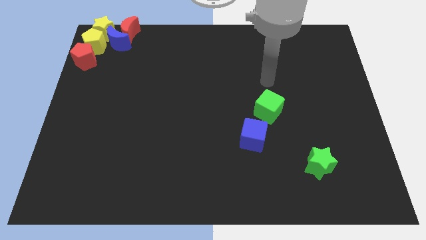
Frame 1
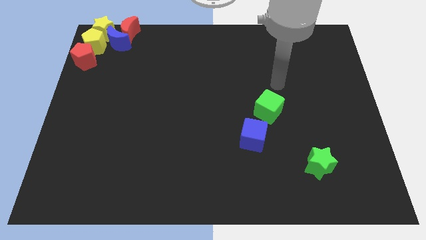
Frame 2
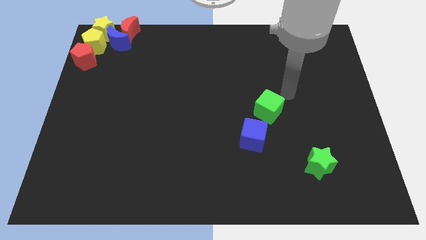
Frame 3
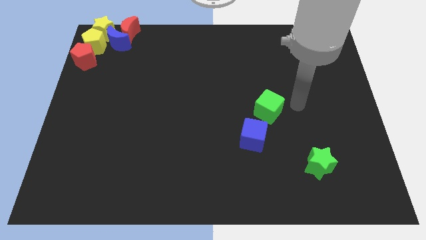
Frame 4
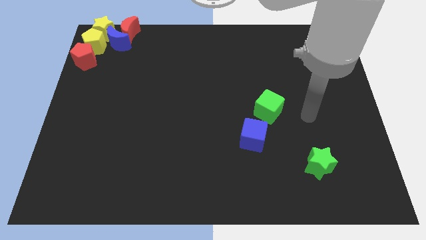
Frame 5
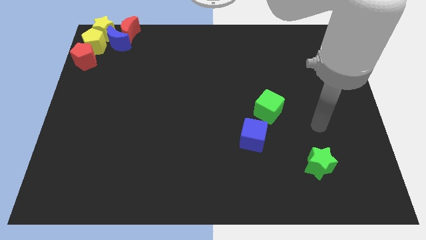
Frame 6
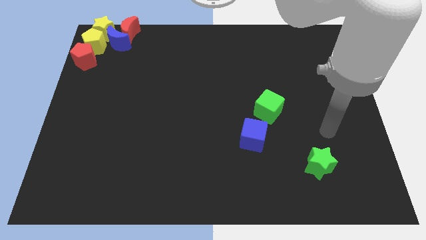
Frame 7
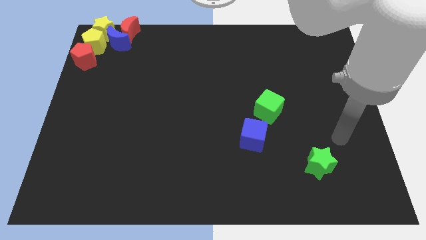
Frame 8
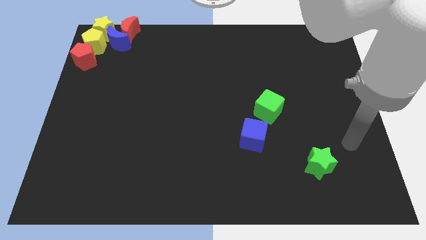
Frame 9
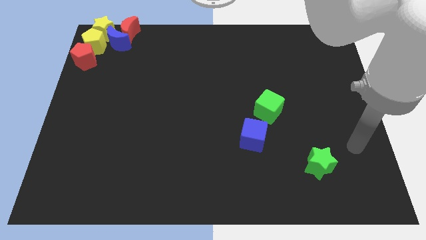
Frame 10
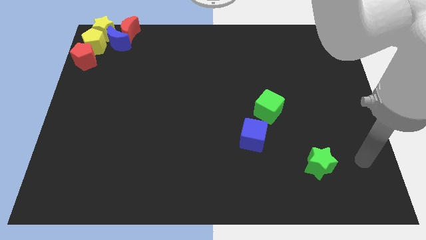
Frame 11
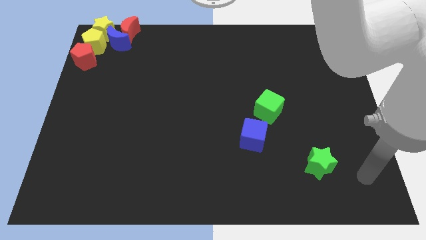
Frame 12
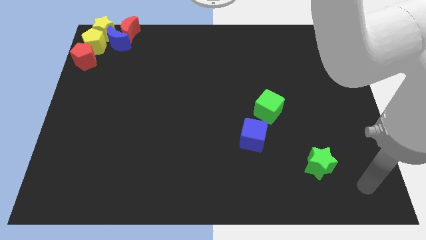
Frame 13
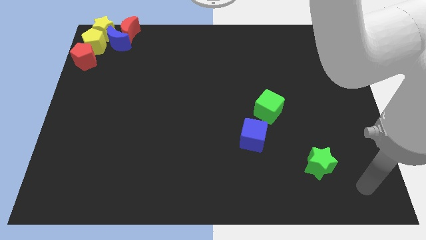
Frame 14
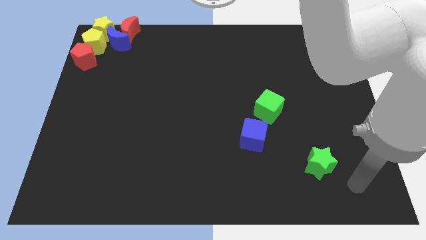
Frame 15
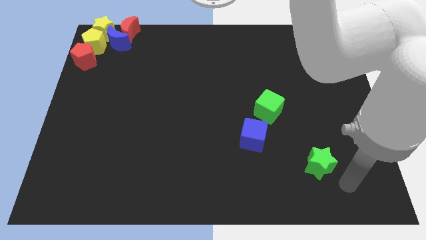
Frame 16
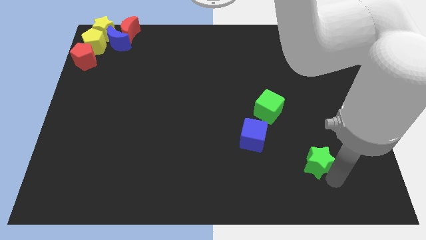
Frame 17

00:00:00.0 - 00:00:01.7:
point the arm to the bottom right of the green star

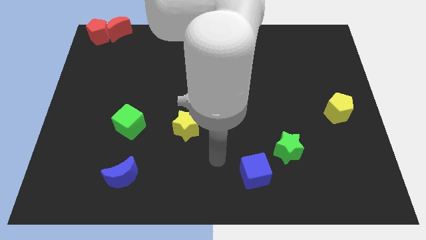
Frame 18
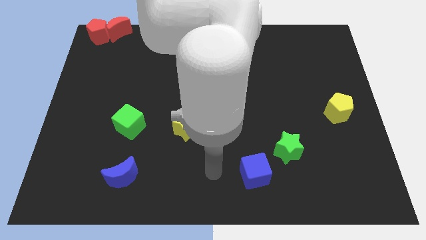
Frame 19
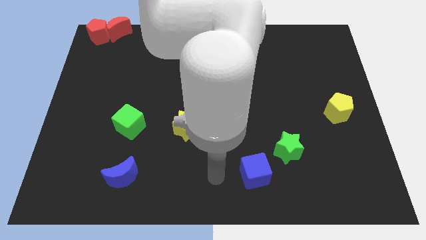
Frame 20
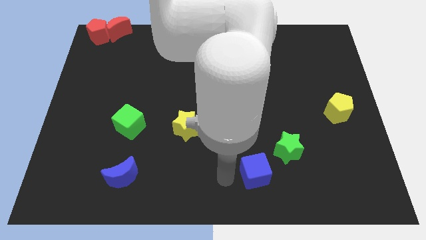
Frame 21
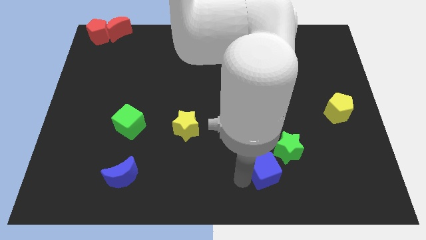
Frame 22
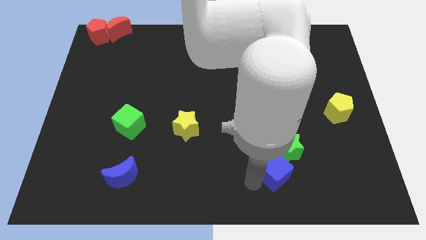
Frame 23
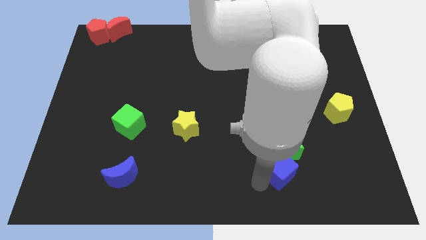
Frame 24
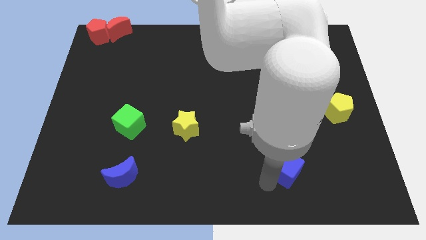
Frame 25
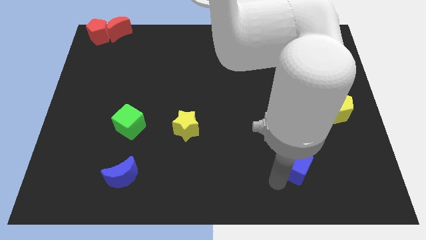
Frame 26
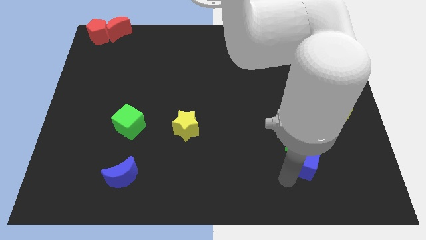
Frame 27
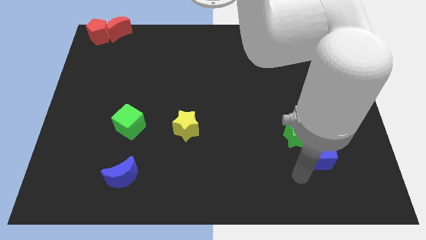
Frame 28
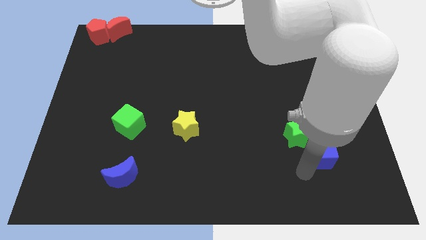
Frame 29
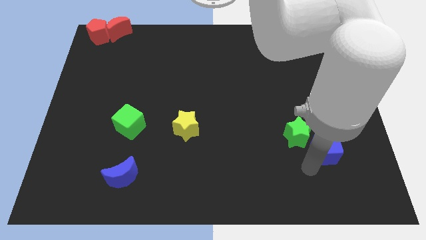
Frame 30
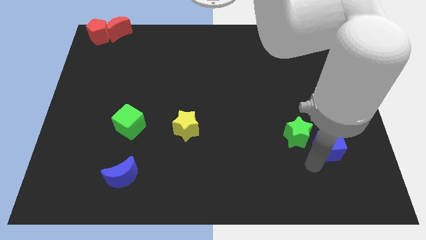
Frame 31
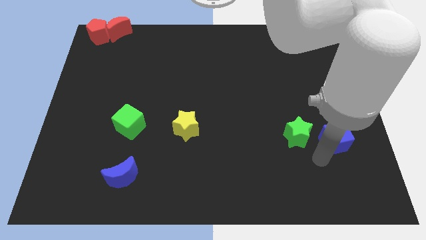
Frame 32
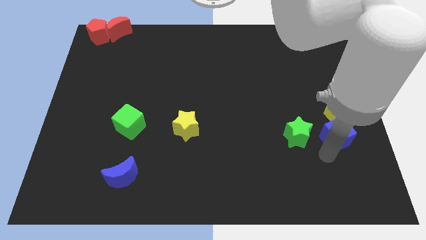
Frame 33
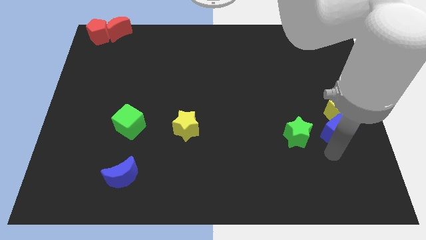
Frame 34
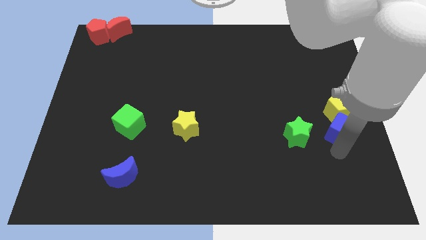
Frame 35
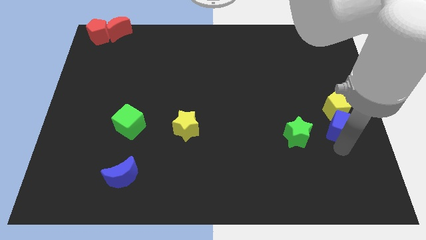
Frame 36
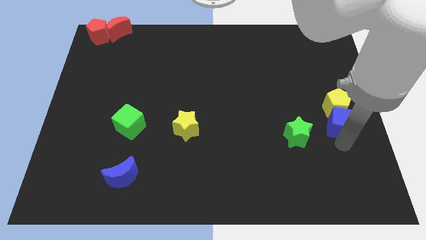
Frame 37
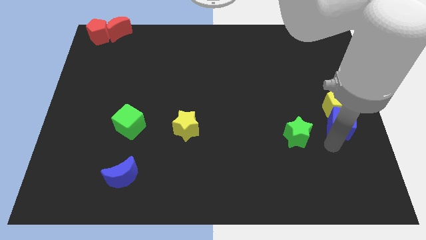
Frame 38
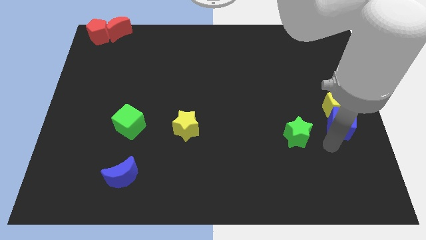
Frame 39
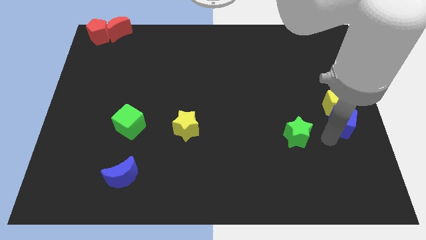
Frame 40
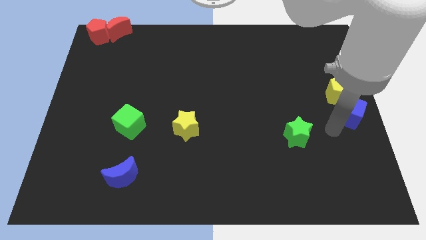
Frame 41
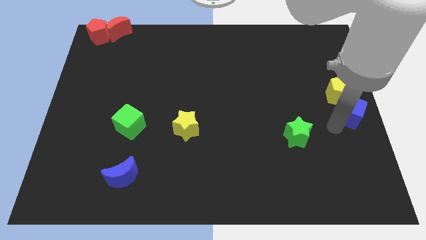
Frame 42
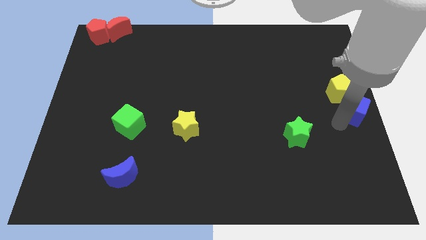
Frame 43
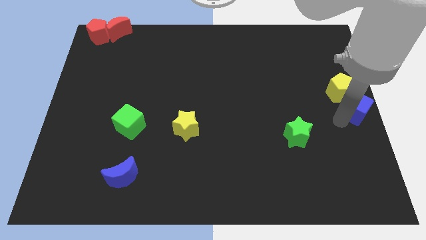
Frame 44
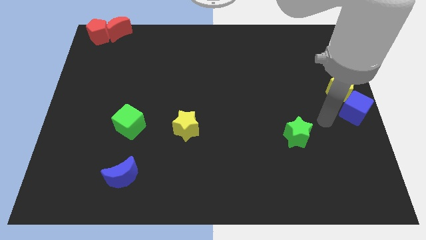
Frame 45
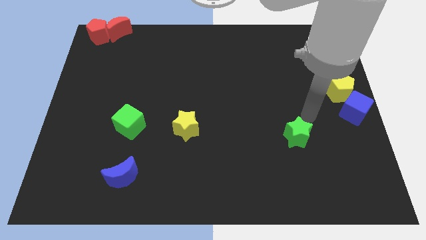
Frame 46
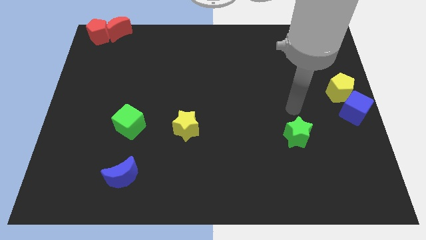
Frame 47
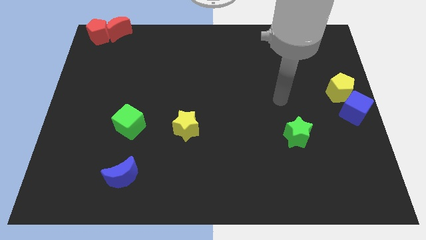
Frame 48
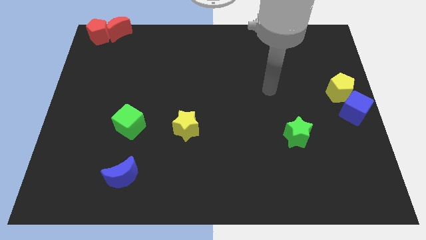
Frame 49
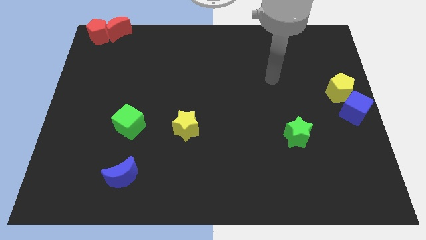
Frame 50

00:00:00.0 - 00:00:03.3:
push the blue cube to the center right

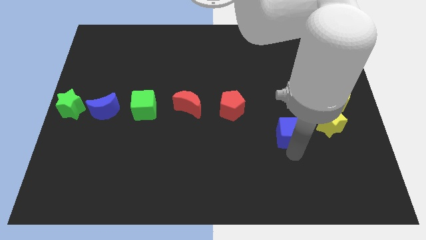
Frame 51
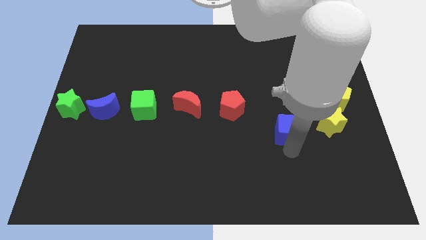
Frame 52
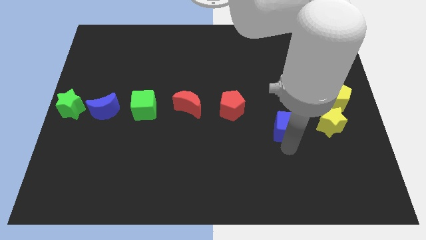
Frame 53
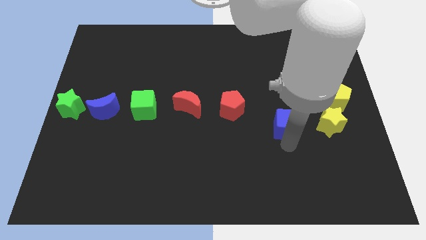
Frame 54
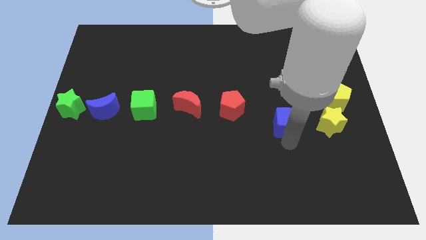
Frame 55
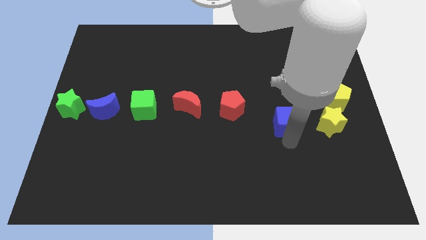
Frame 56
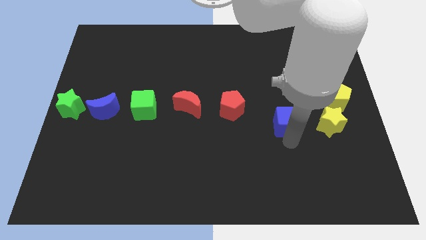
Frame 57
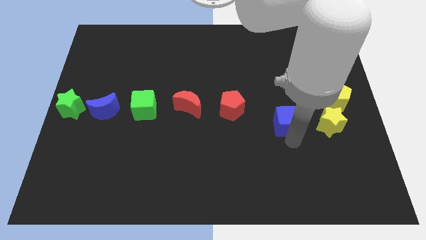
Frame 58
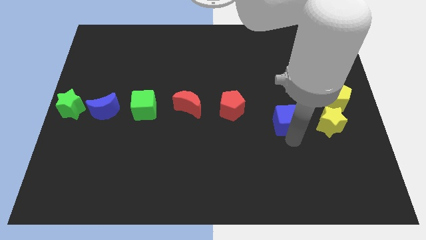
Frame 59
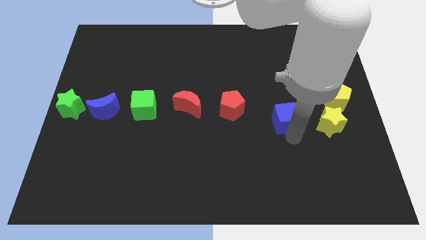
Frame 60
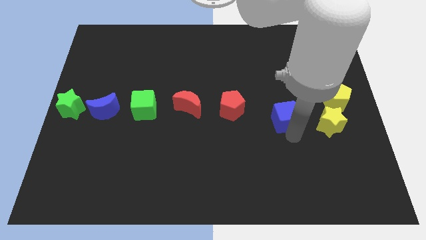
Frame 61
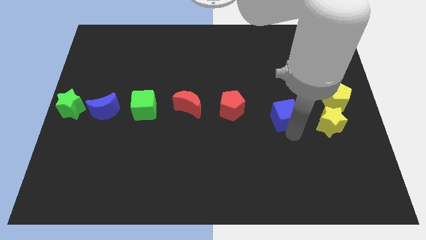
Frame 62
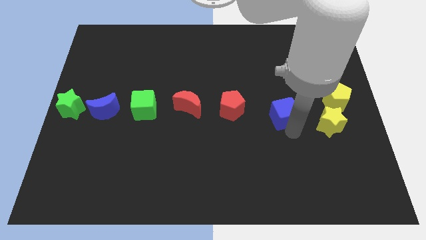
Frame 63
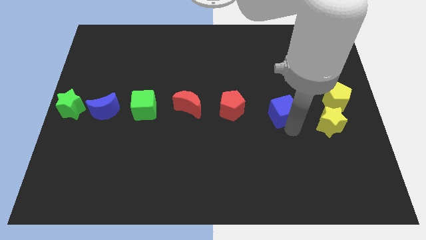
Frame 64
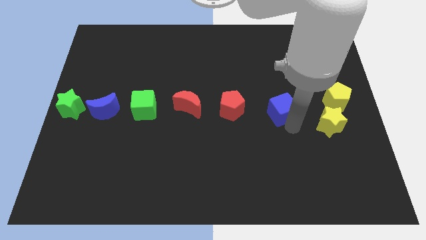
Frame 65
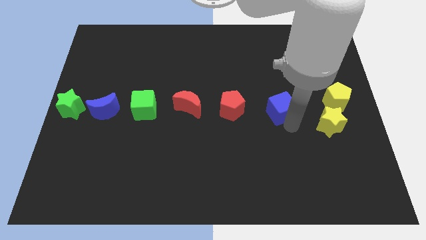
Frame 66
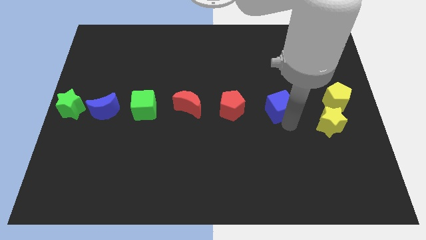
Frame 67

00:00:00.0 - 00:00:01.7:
push the blue cube to the right of red pentagon

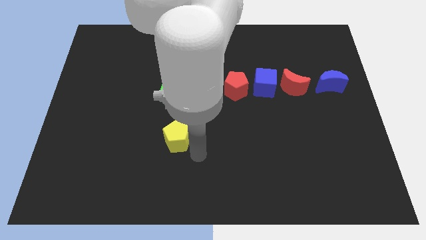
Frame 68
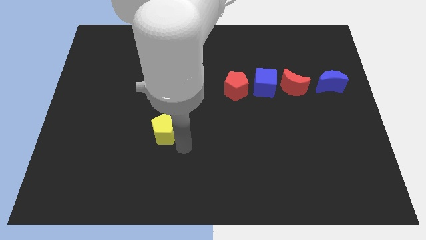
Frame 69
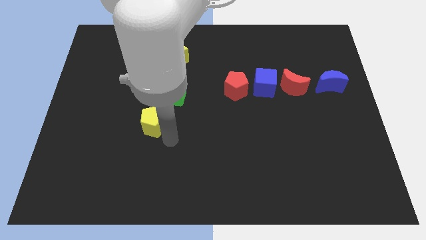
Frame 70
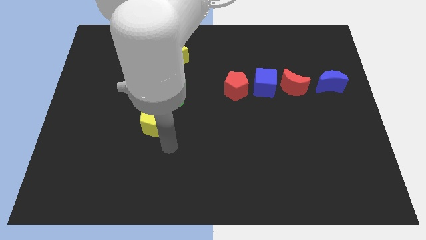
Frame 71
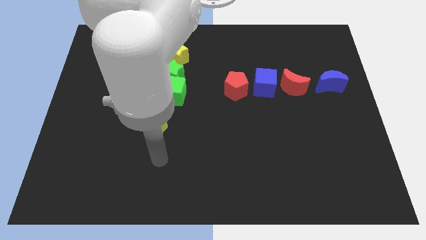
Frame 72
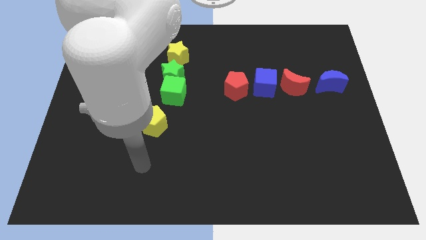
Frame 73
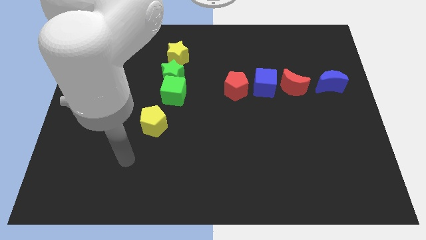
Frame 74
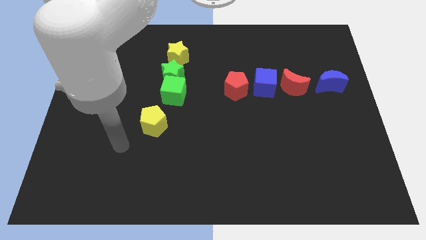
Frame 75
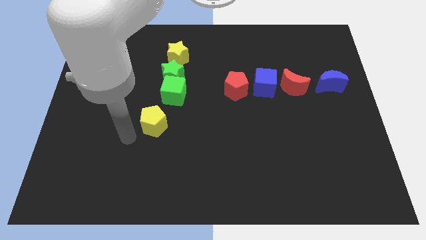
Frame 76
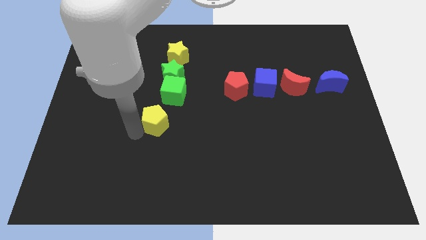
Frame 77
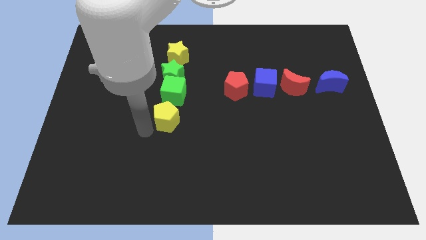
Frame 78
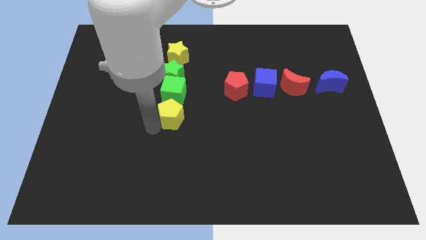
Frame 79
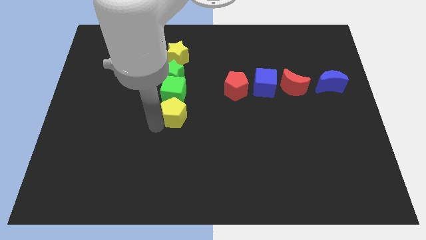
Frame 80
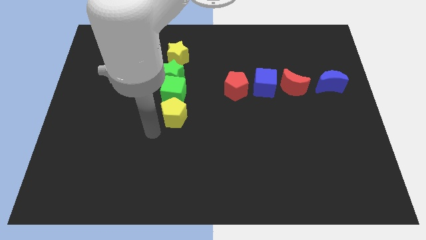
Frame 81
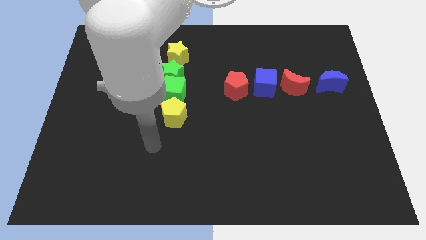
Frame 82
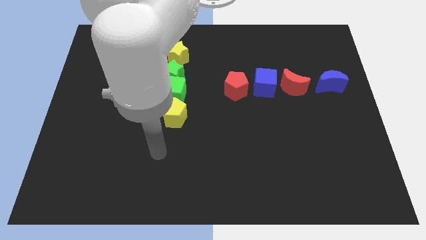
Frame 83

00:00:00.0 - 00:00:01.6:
place the yellow pentagon under the green cube

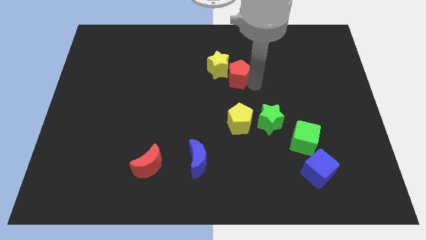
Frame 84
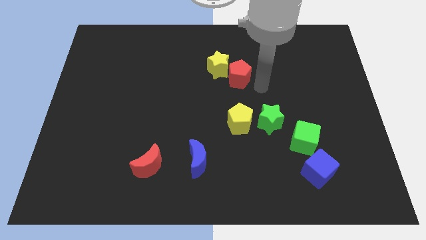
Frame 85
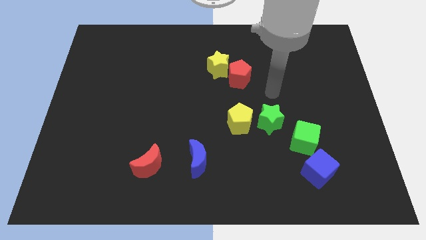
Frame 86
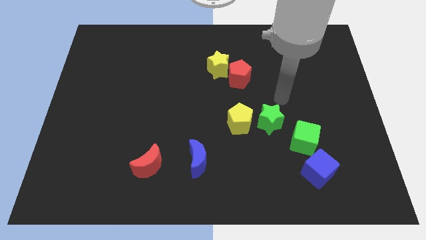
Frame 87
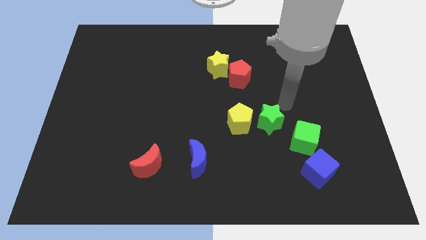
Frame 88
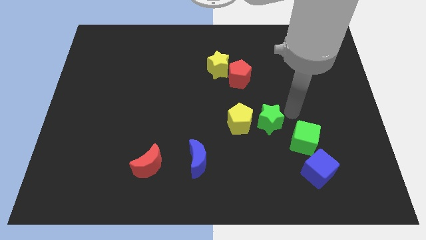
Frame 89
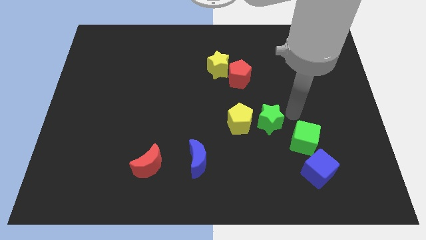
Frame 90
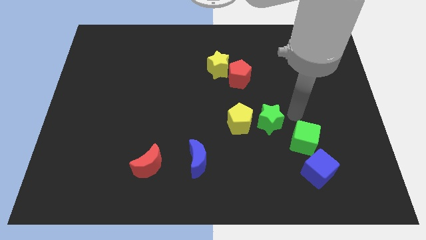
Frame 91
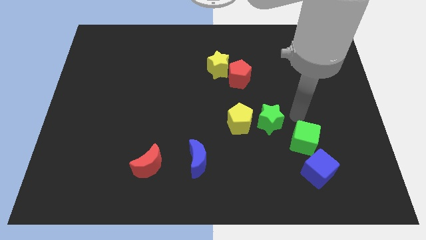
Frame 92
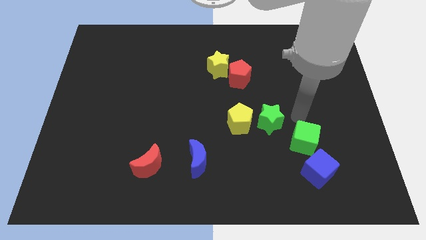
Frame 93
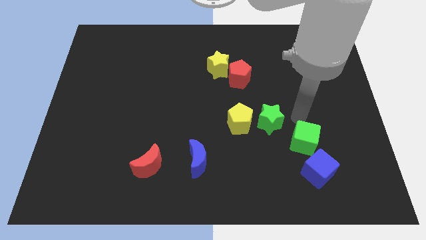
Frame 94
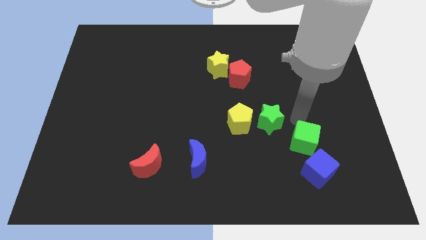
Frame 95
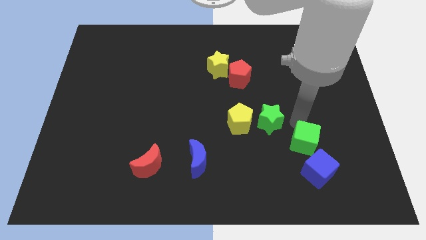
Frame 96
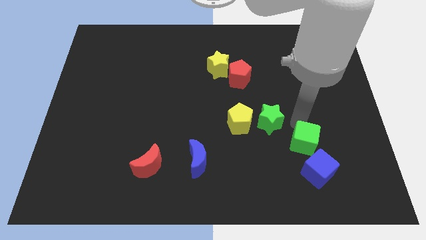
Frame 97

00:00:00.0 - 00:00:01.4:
tab at the top side of the green cube
